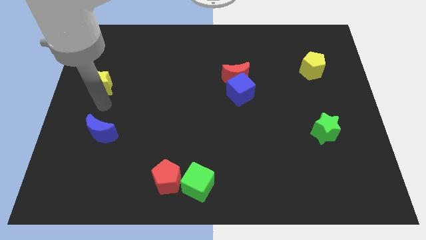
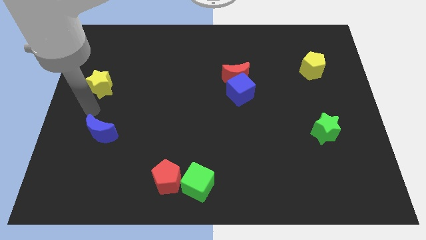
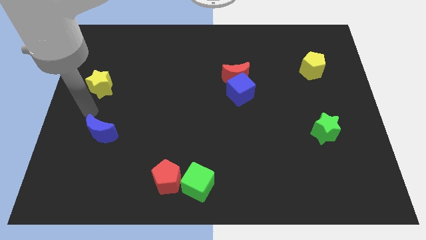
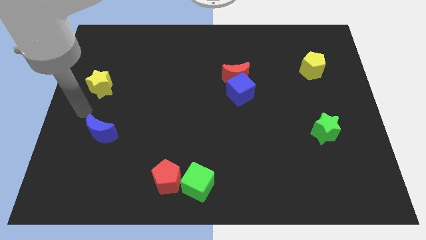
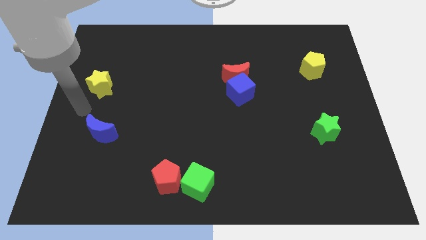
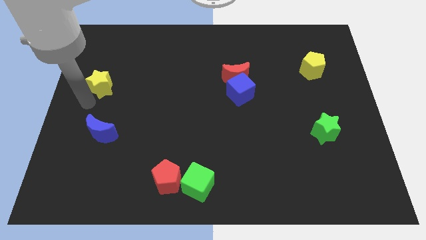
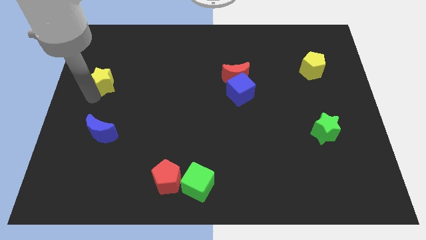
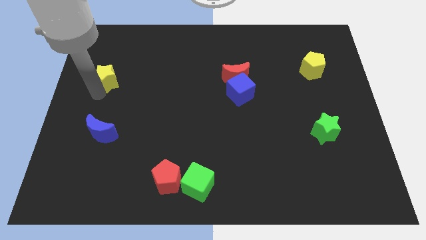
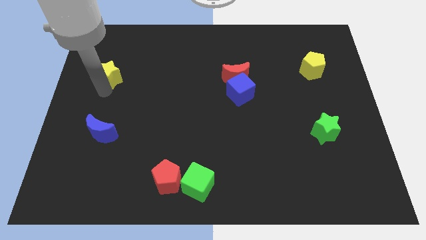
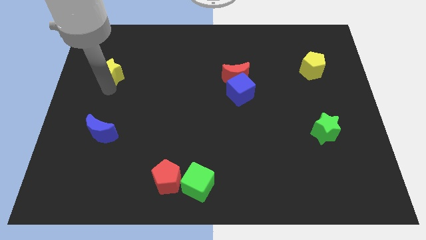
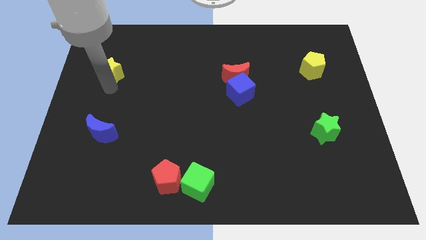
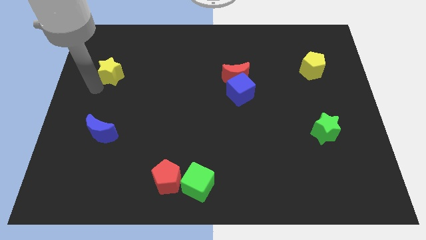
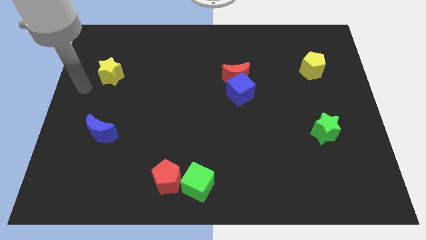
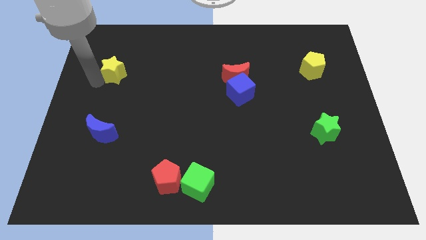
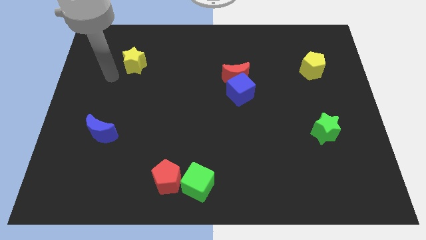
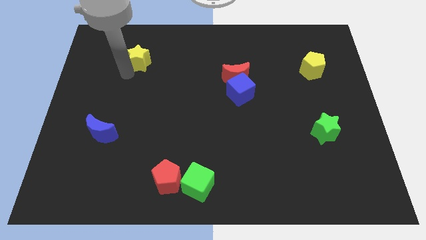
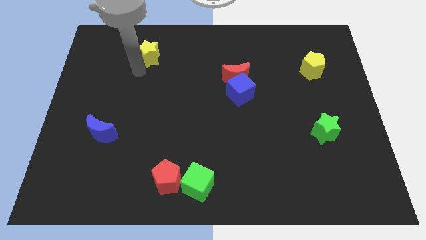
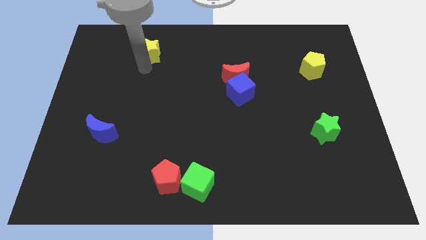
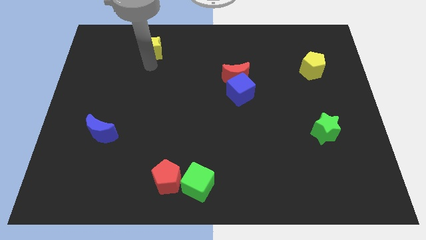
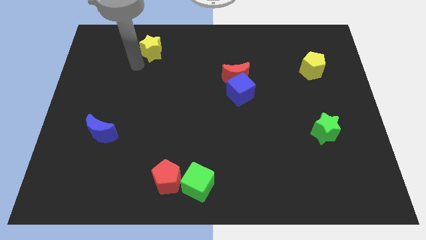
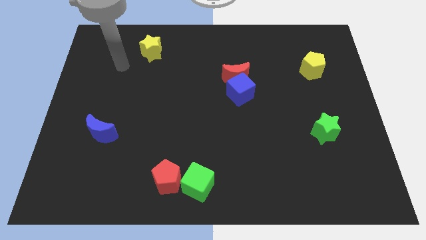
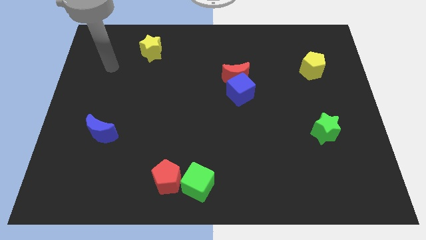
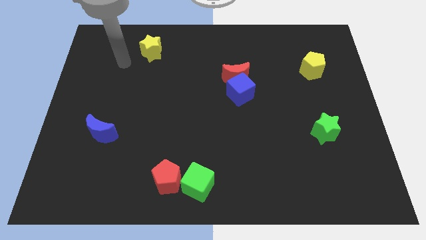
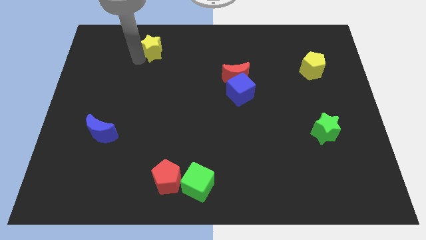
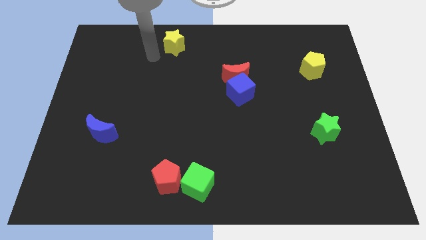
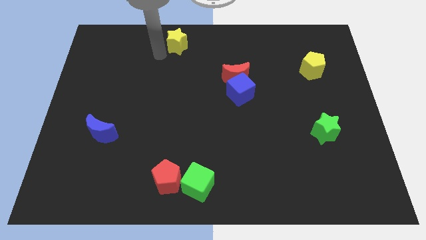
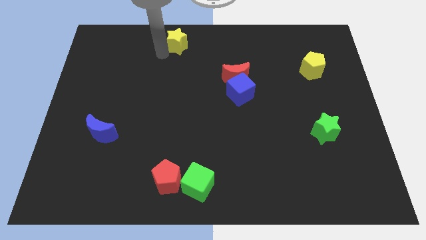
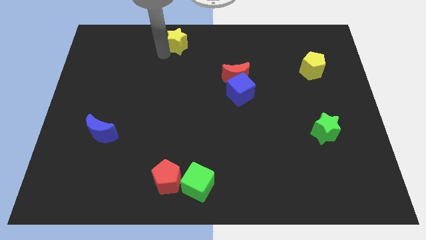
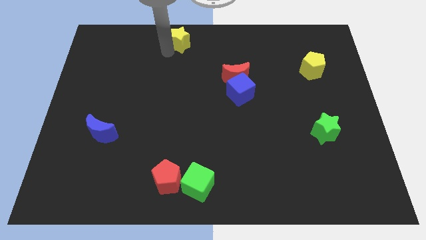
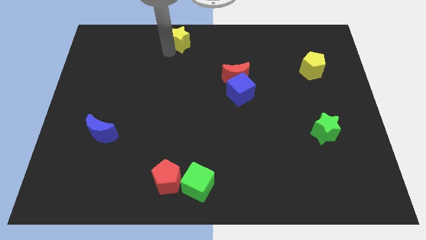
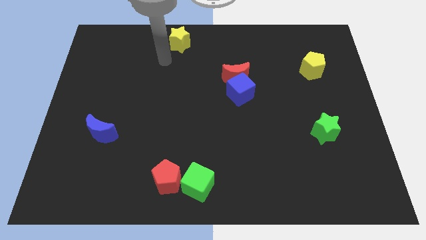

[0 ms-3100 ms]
move the yellow star diagonal to the red moon

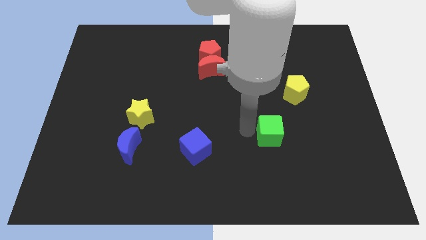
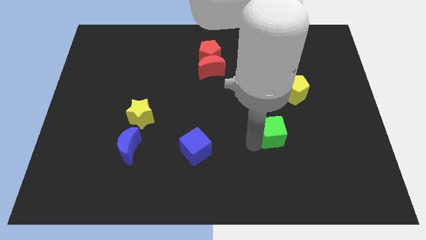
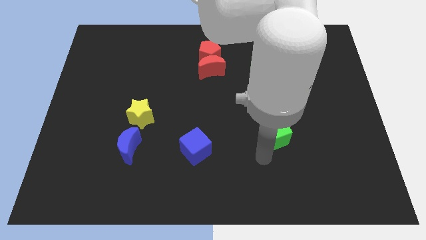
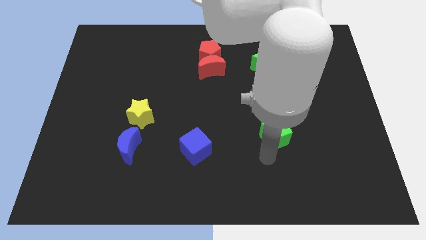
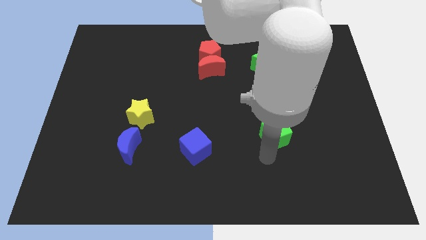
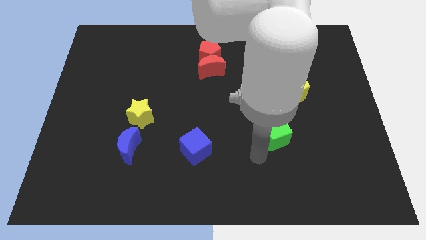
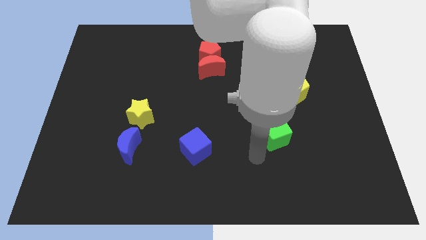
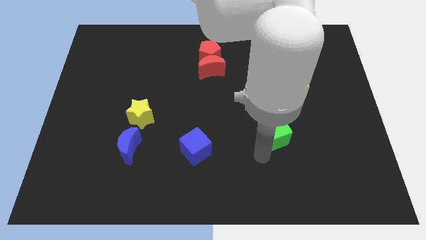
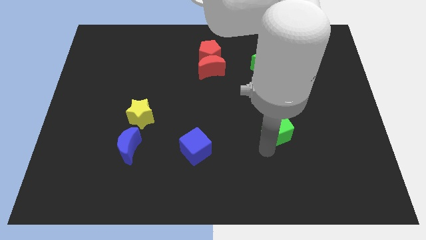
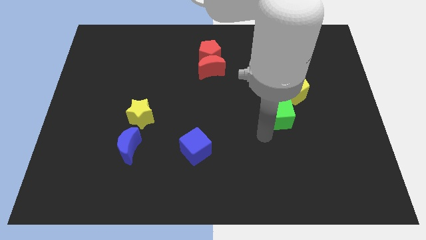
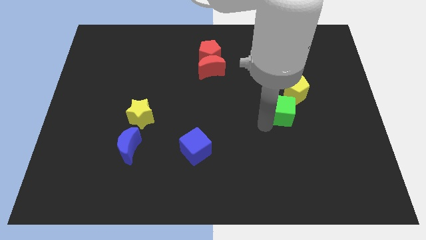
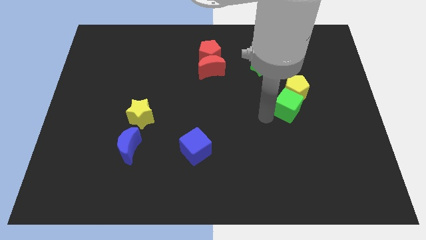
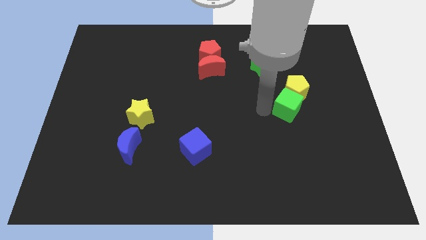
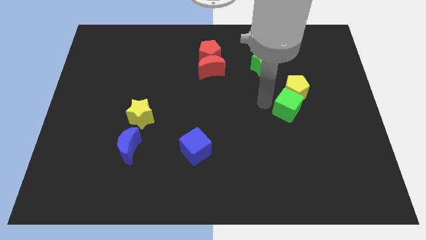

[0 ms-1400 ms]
push the green cube into the yellow pentagon

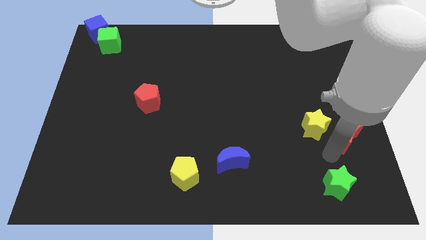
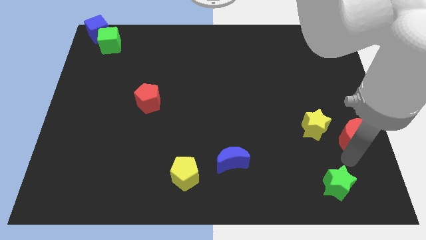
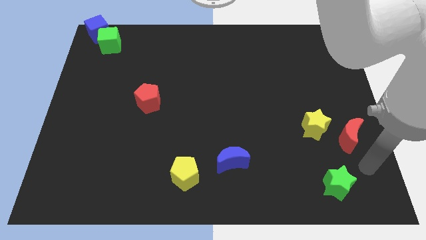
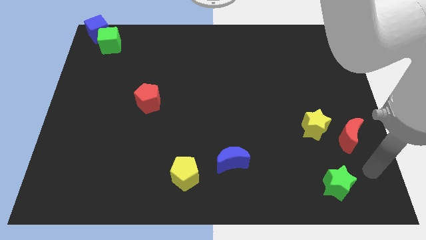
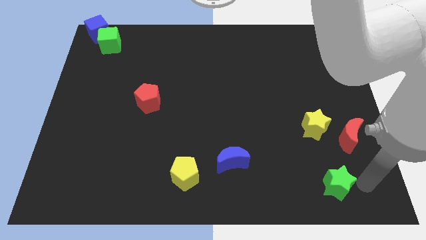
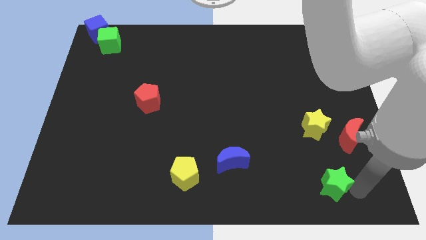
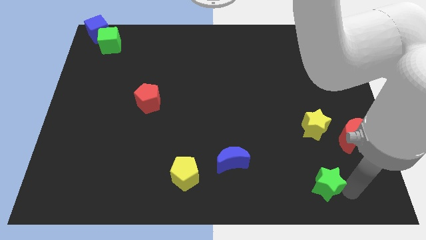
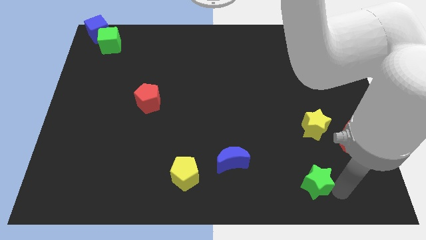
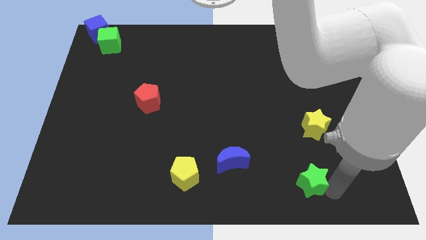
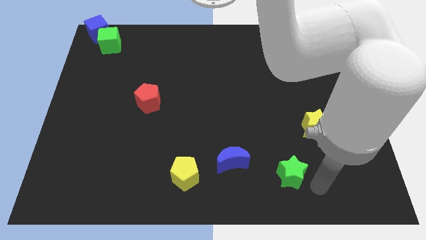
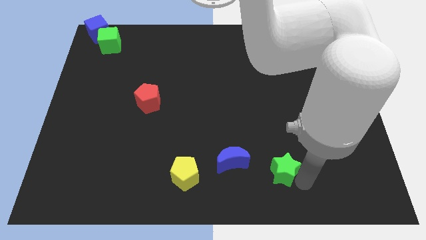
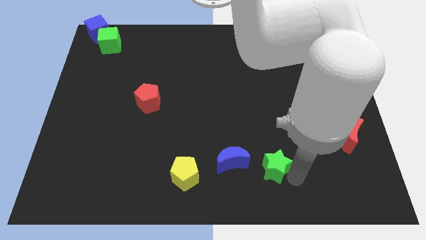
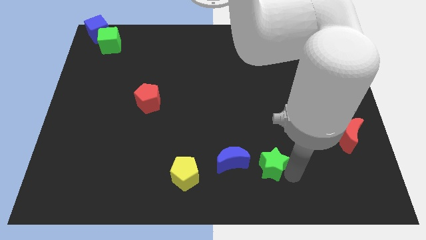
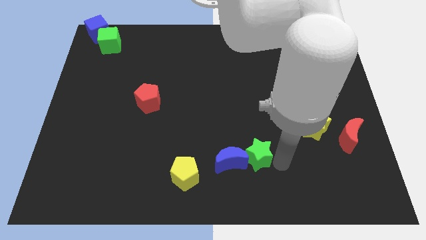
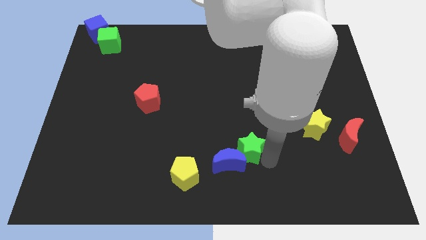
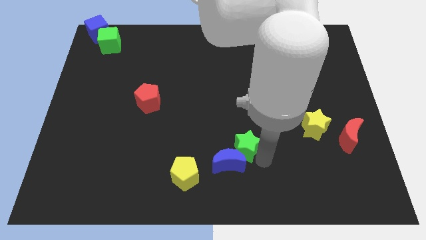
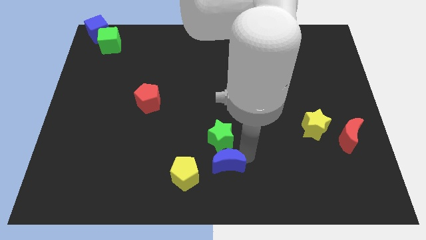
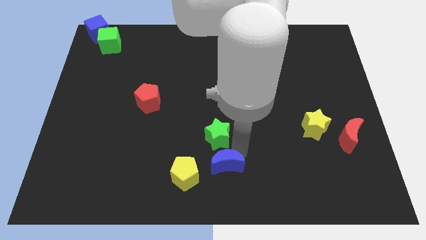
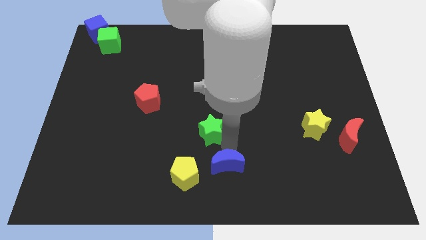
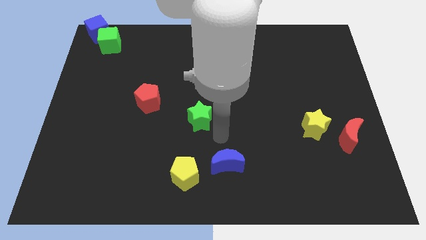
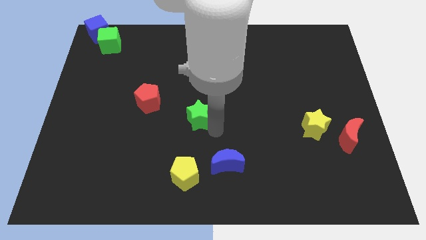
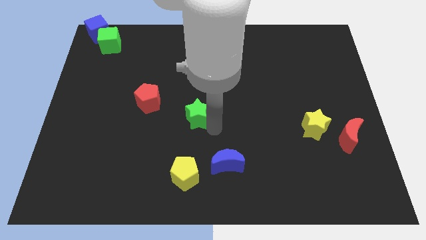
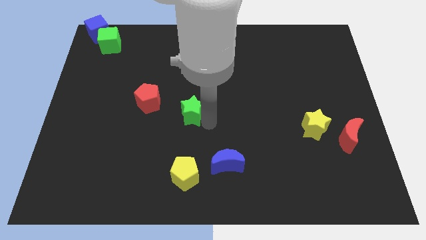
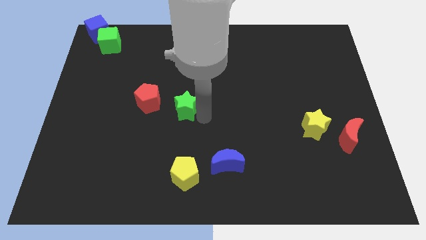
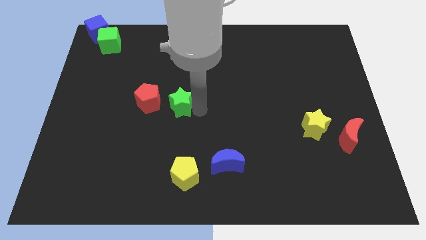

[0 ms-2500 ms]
move the green star to the right of the red pentagon

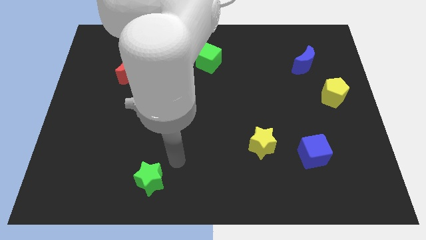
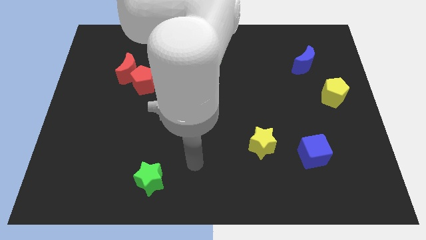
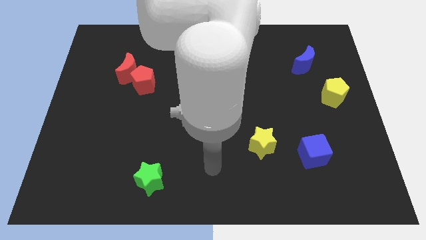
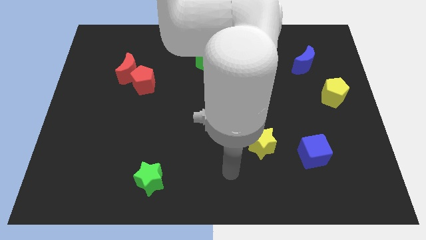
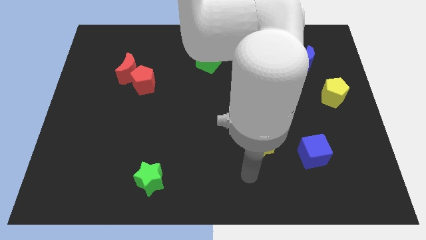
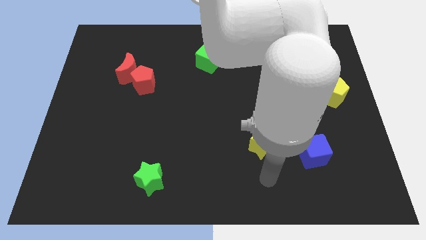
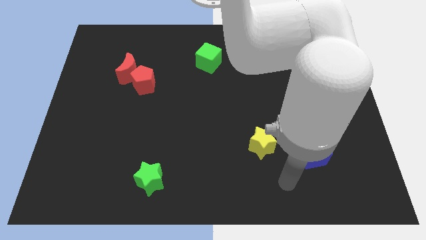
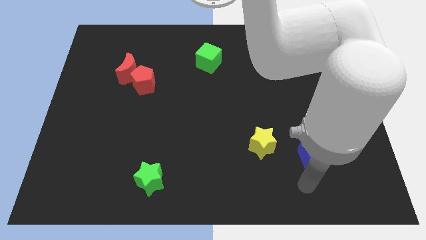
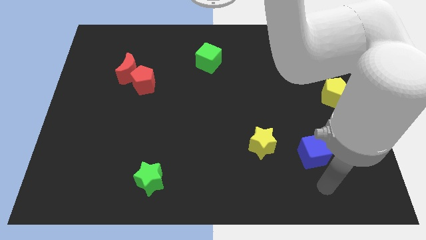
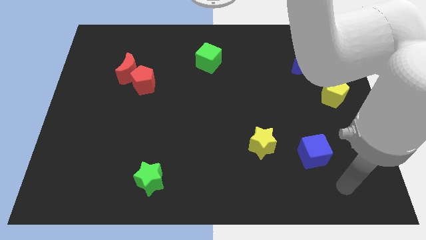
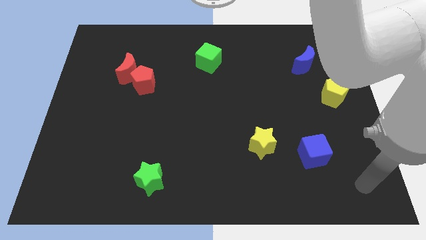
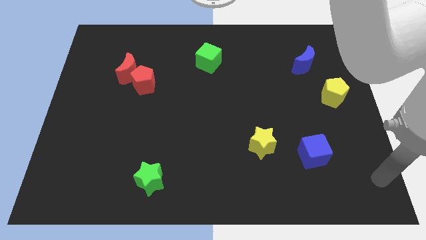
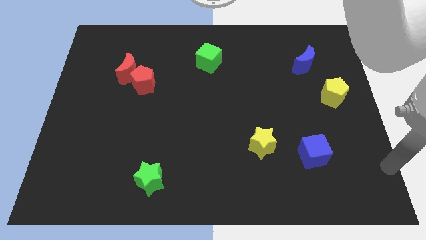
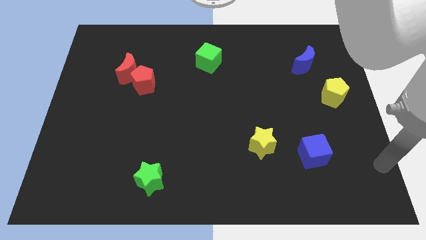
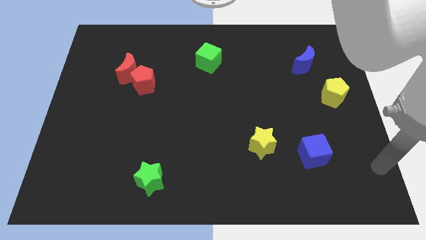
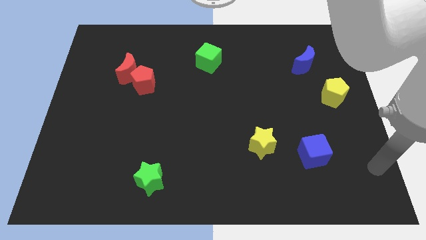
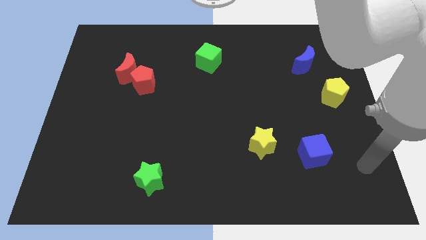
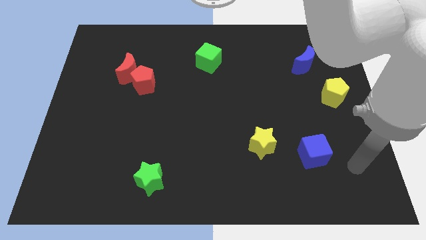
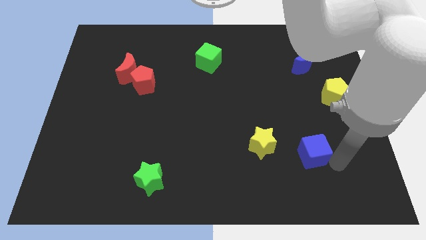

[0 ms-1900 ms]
point your hand at the bottom right side of the blue cube

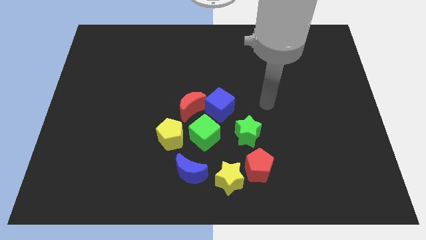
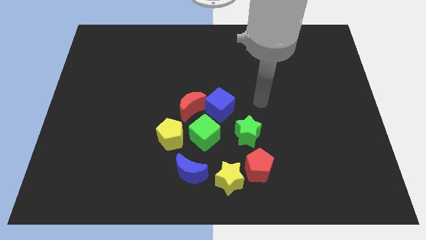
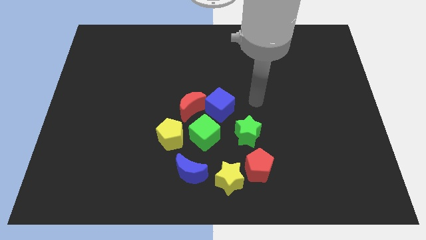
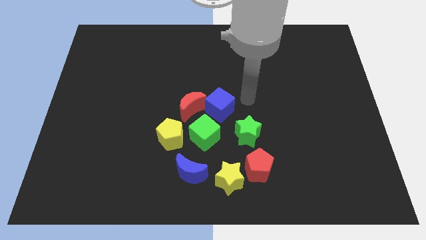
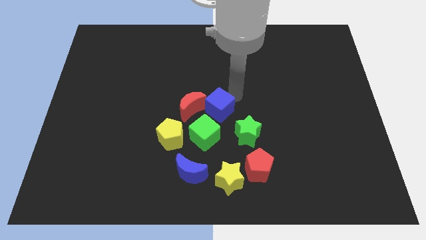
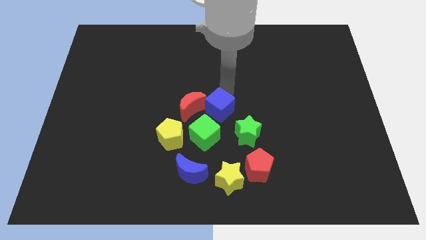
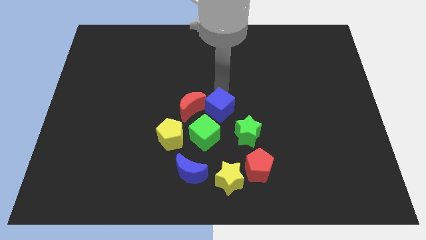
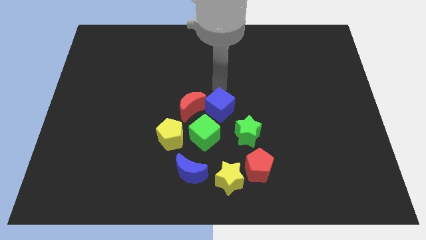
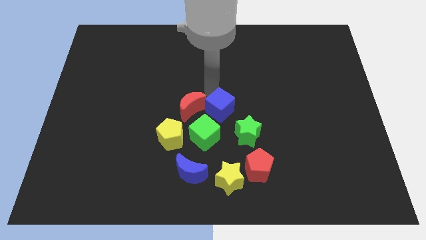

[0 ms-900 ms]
move your arm towards center of the board
